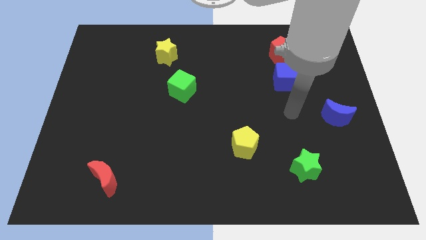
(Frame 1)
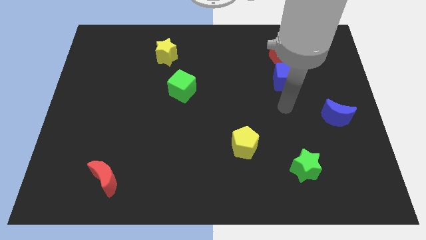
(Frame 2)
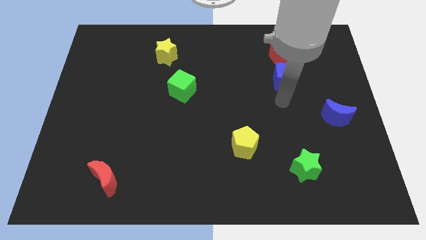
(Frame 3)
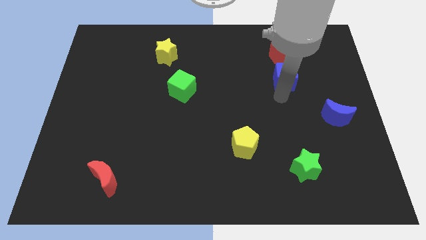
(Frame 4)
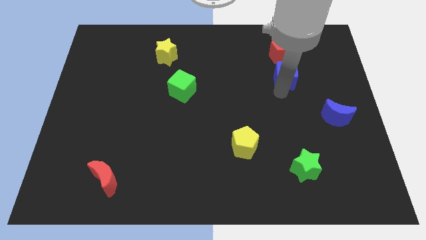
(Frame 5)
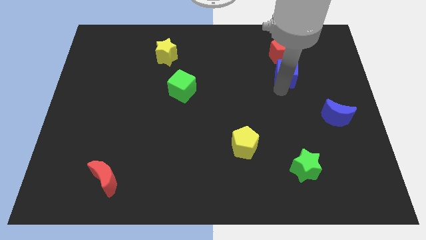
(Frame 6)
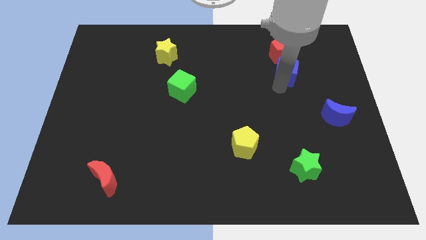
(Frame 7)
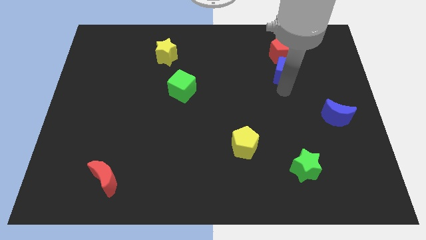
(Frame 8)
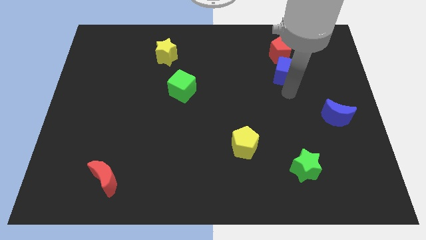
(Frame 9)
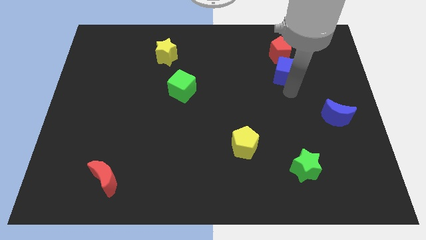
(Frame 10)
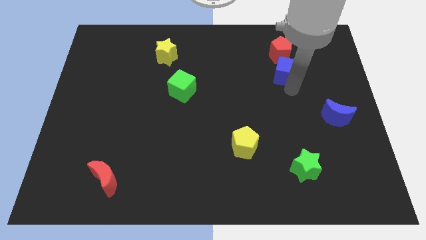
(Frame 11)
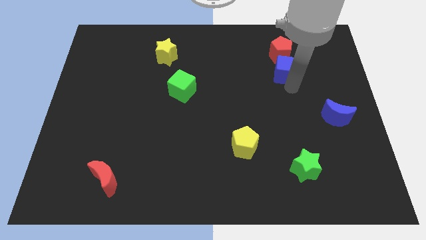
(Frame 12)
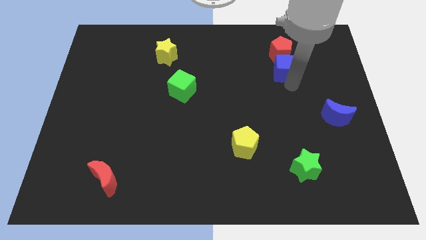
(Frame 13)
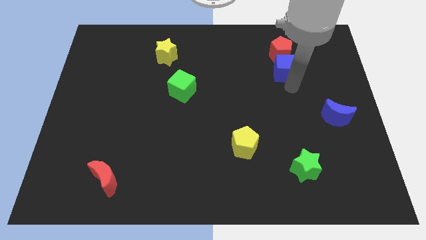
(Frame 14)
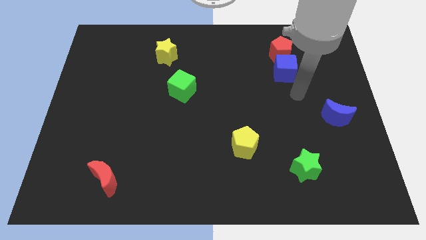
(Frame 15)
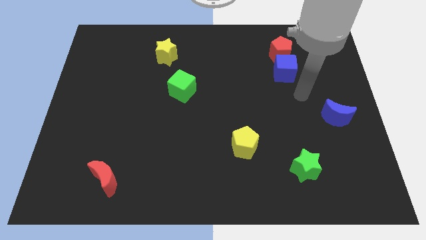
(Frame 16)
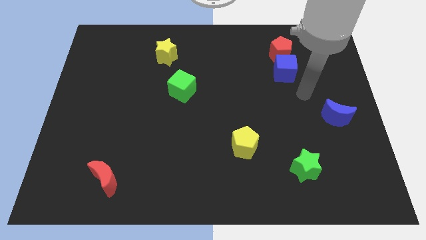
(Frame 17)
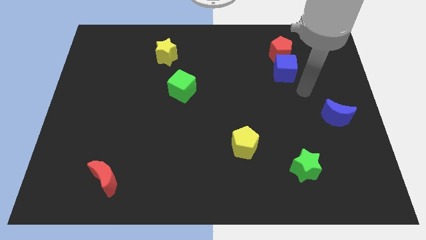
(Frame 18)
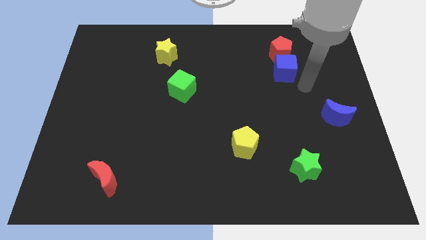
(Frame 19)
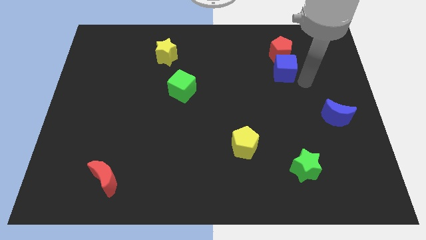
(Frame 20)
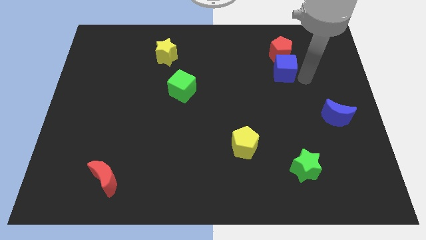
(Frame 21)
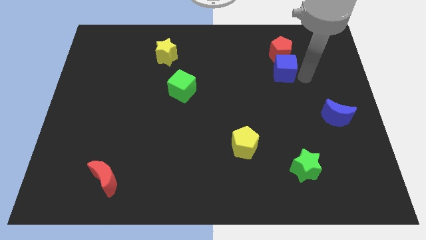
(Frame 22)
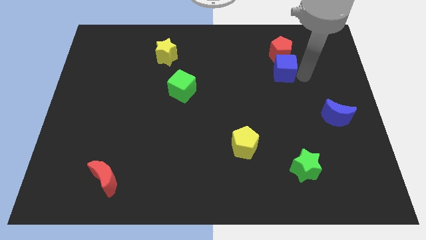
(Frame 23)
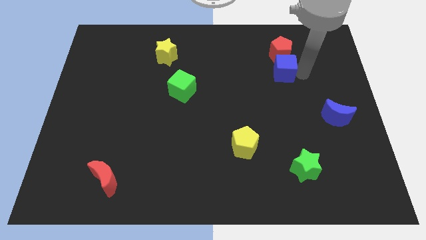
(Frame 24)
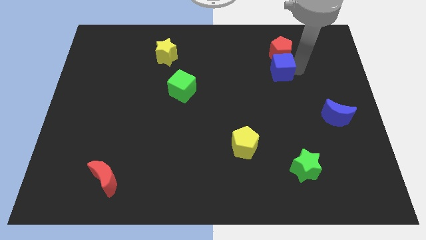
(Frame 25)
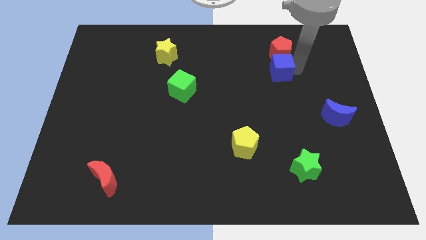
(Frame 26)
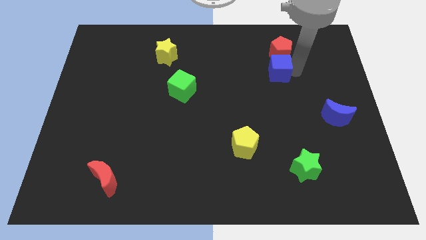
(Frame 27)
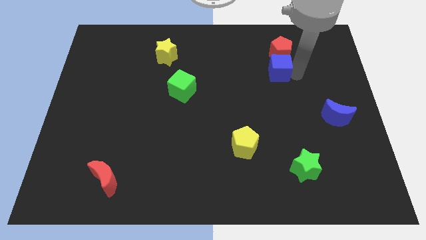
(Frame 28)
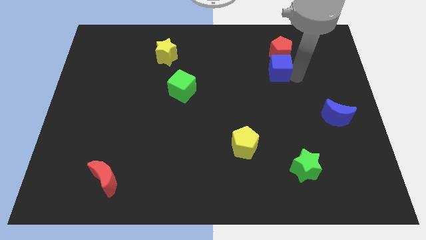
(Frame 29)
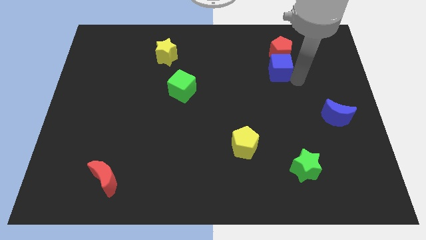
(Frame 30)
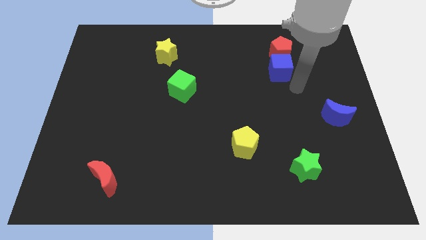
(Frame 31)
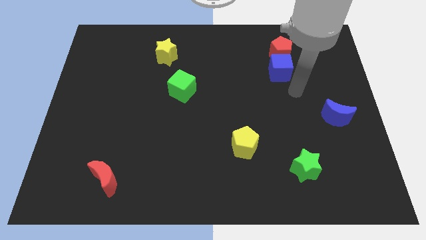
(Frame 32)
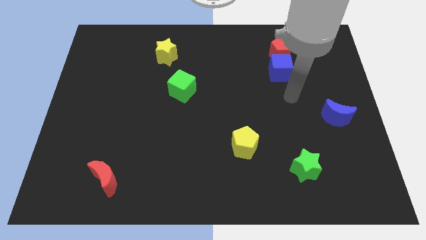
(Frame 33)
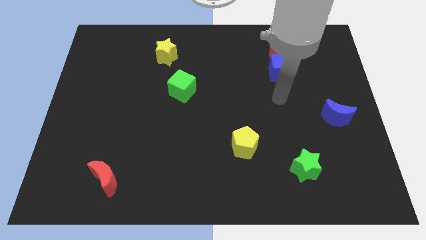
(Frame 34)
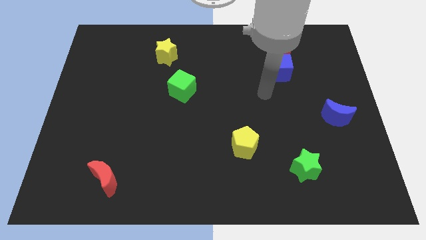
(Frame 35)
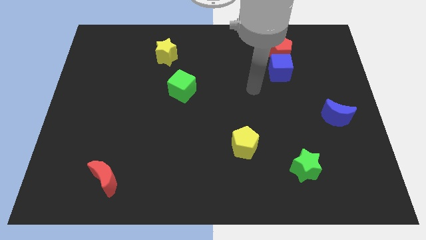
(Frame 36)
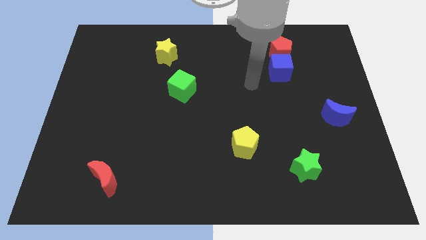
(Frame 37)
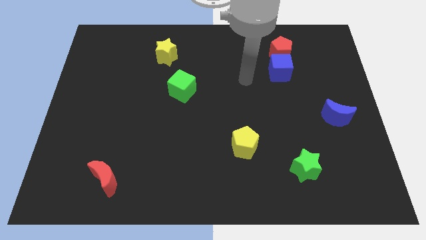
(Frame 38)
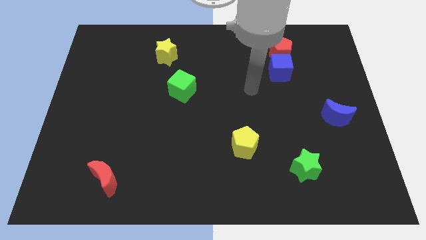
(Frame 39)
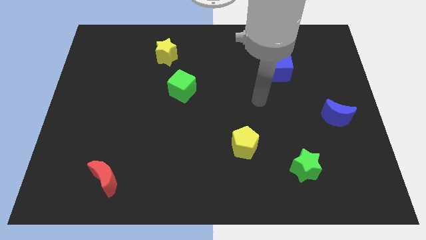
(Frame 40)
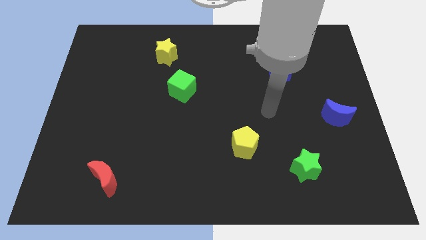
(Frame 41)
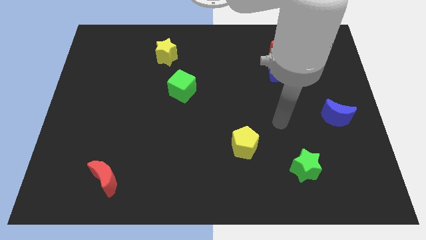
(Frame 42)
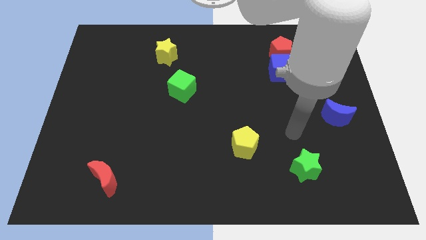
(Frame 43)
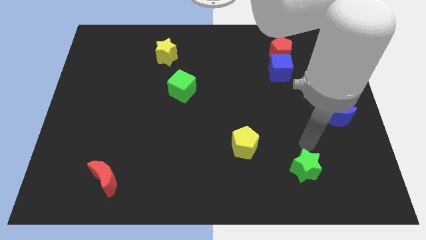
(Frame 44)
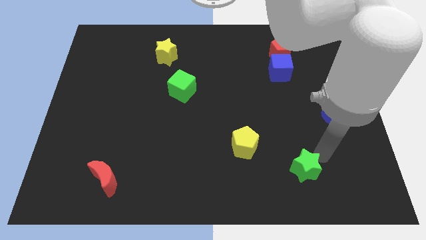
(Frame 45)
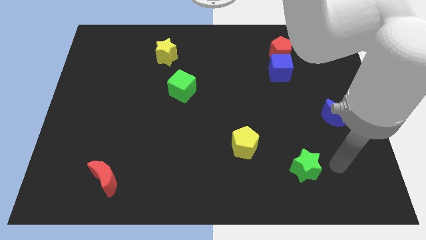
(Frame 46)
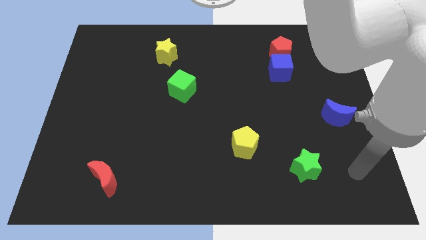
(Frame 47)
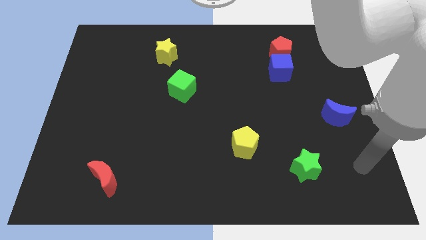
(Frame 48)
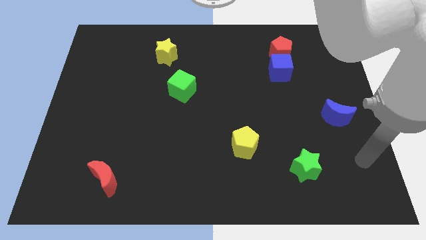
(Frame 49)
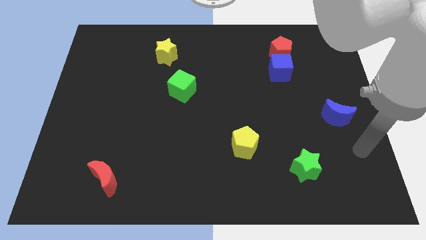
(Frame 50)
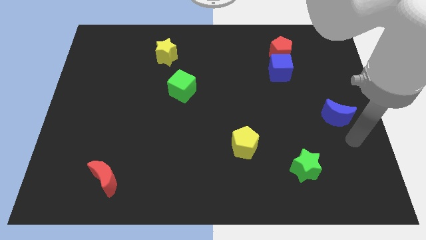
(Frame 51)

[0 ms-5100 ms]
push the blue cube into the red pentagon

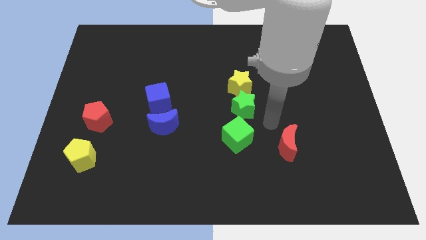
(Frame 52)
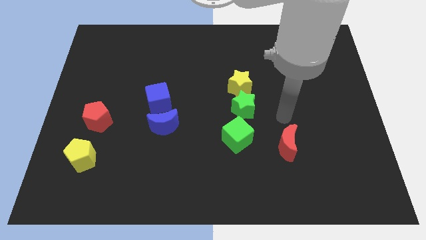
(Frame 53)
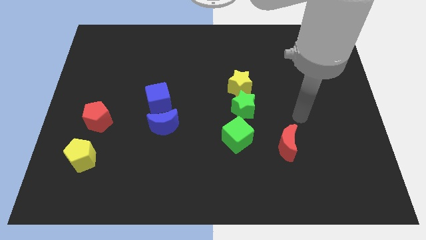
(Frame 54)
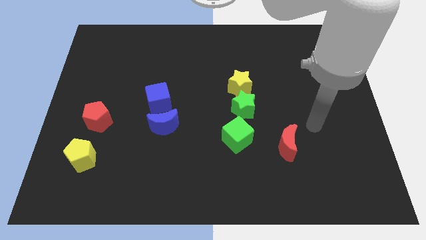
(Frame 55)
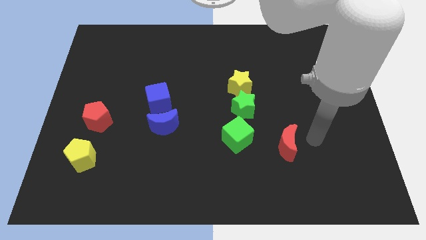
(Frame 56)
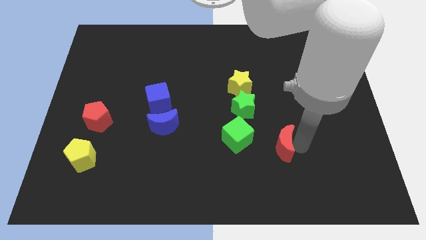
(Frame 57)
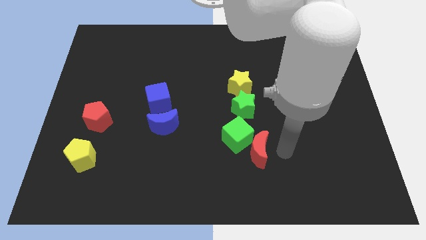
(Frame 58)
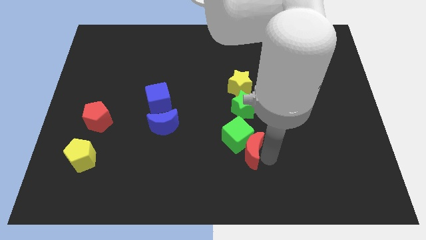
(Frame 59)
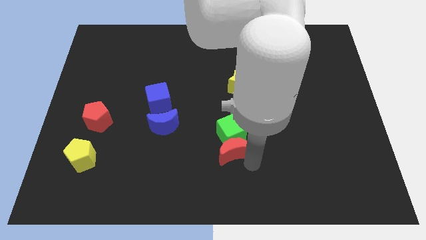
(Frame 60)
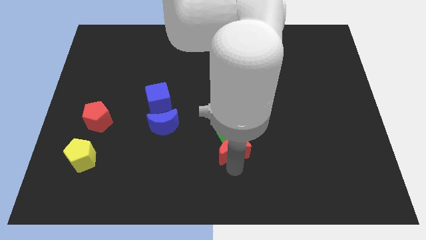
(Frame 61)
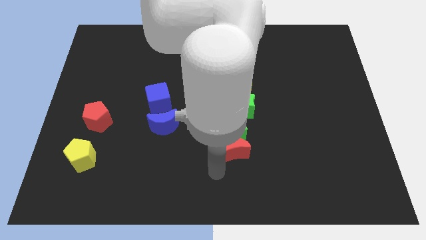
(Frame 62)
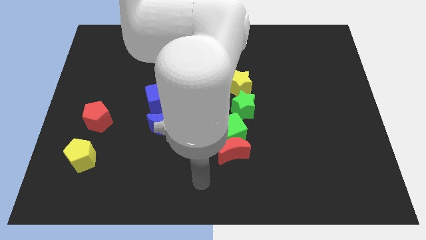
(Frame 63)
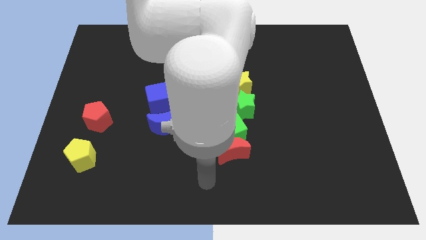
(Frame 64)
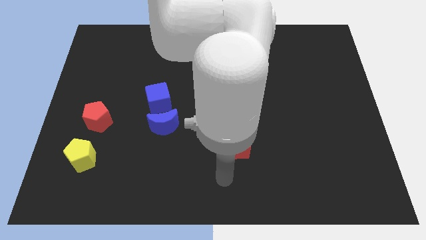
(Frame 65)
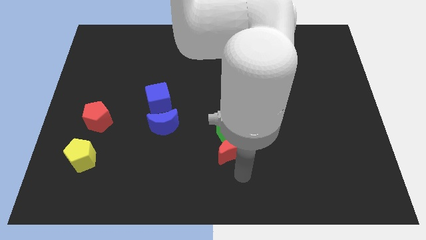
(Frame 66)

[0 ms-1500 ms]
push the red moon into the green cube

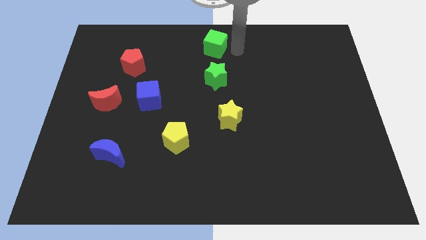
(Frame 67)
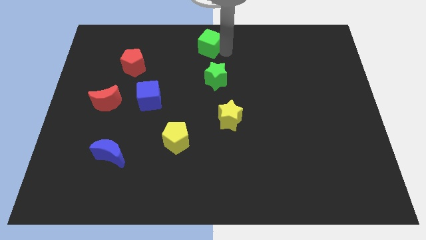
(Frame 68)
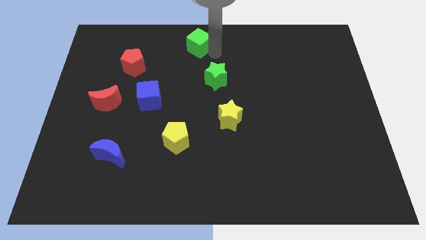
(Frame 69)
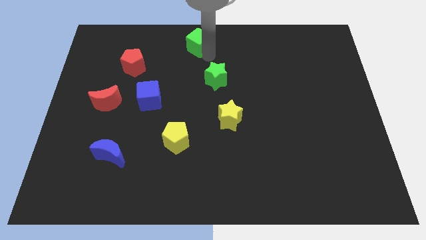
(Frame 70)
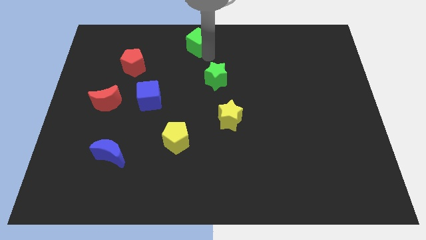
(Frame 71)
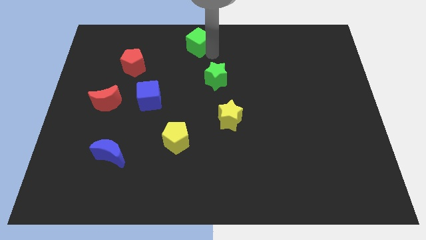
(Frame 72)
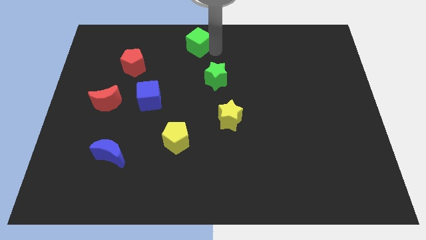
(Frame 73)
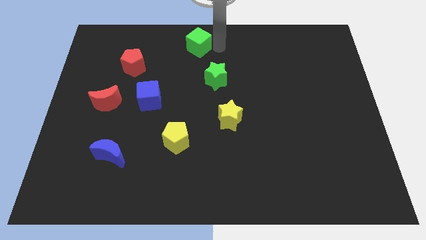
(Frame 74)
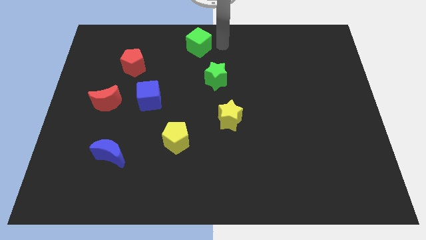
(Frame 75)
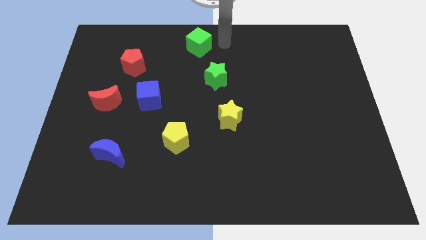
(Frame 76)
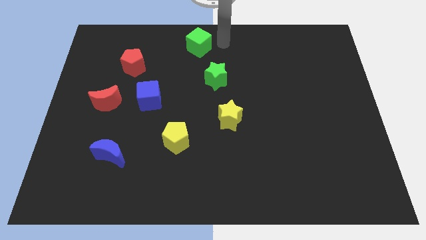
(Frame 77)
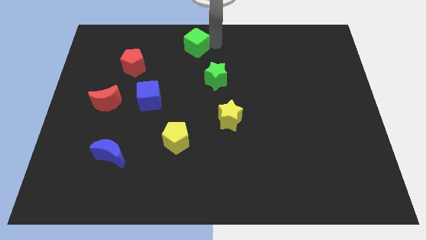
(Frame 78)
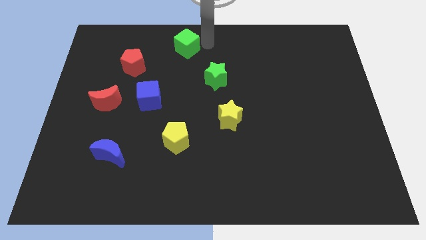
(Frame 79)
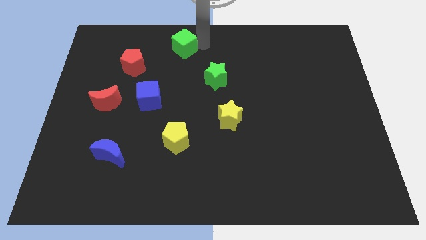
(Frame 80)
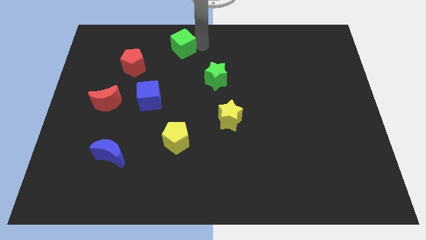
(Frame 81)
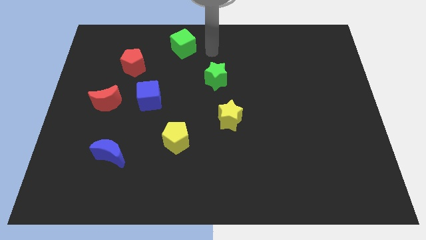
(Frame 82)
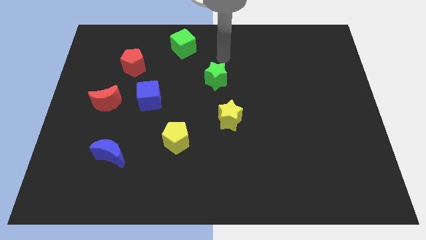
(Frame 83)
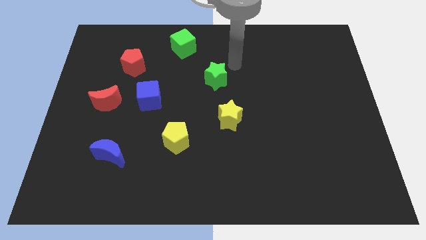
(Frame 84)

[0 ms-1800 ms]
push the green cube to the top left of the green star

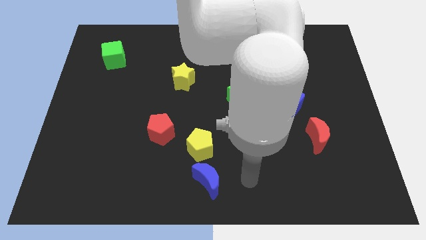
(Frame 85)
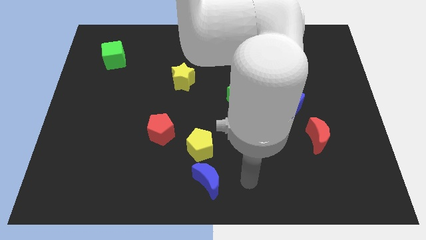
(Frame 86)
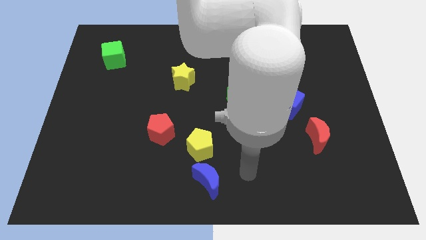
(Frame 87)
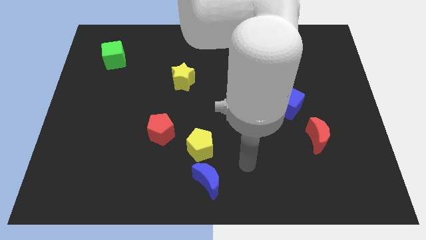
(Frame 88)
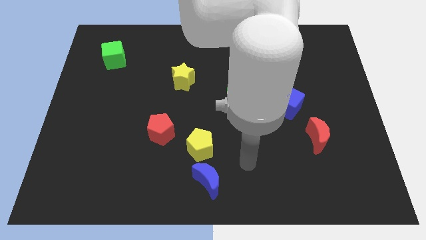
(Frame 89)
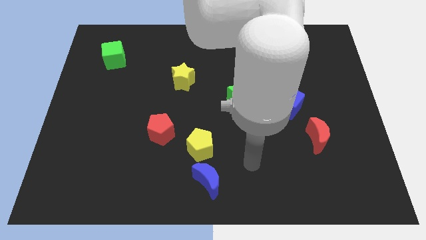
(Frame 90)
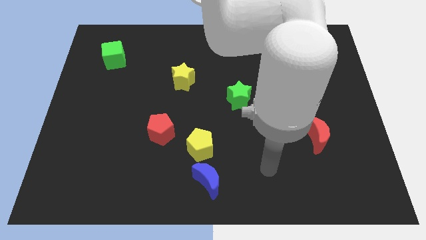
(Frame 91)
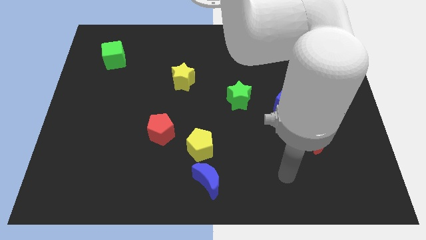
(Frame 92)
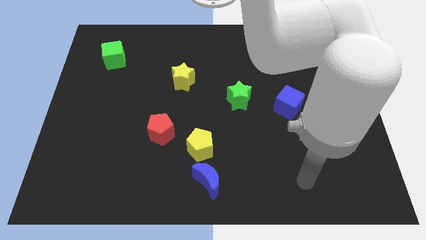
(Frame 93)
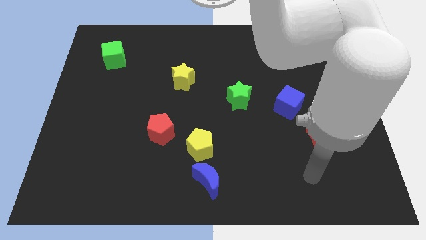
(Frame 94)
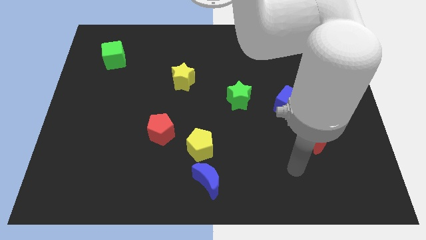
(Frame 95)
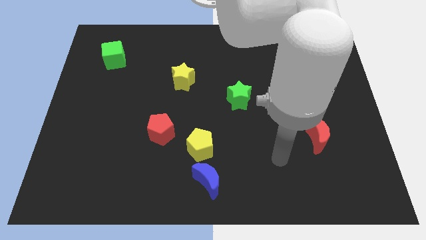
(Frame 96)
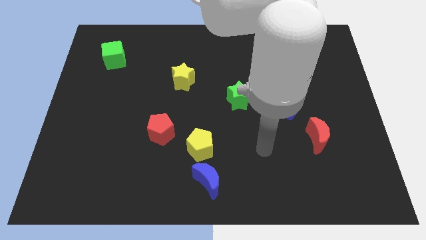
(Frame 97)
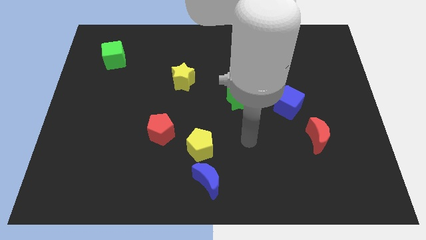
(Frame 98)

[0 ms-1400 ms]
point the arm to the right of the yellow pentagon
